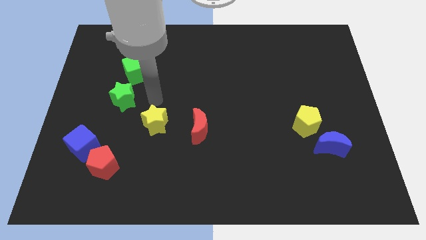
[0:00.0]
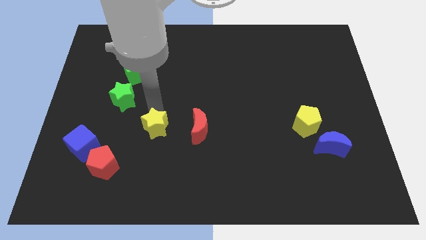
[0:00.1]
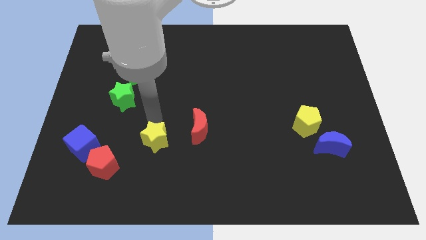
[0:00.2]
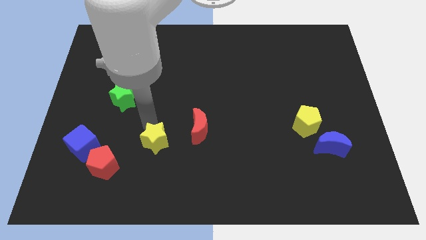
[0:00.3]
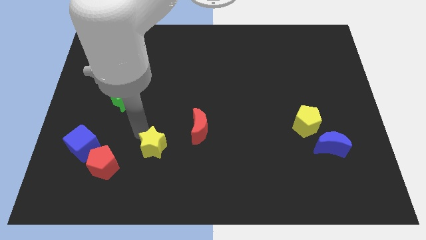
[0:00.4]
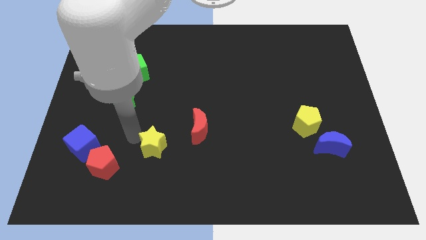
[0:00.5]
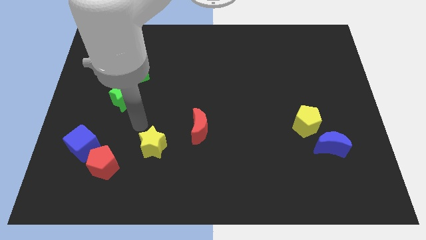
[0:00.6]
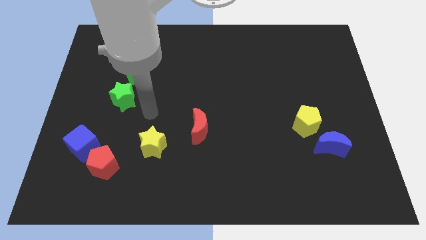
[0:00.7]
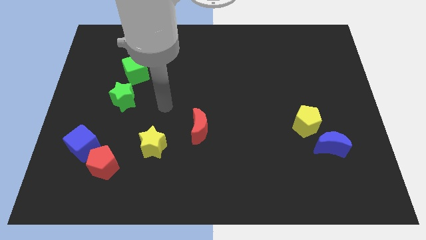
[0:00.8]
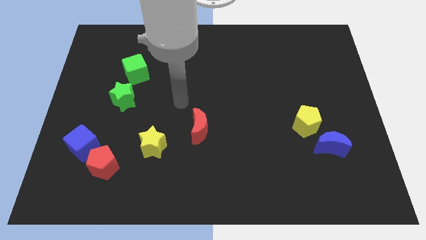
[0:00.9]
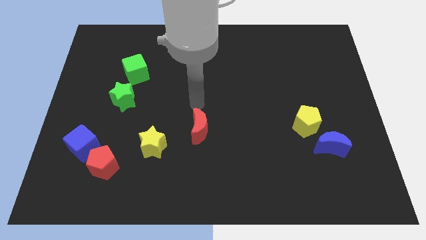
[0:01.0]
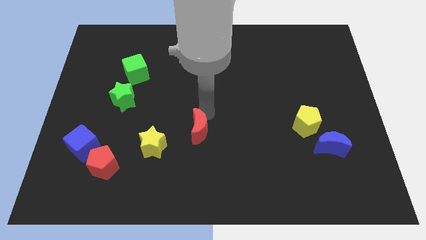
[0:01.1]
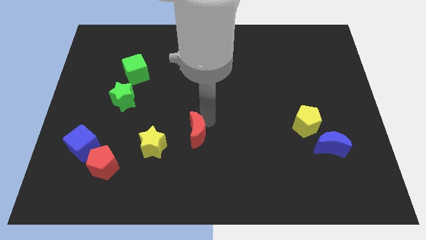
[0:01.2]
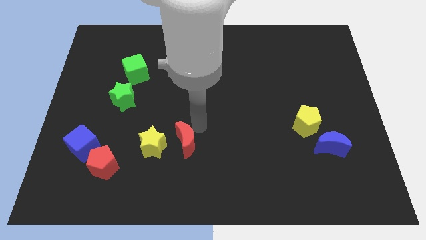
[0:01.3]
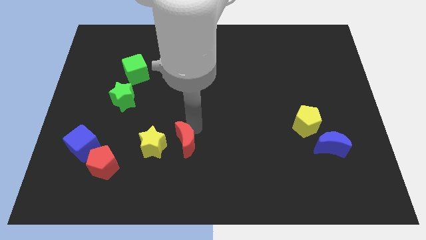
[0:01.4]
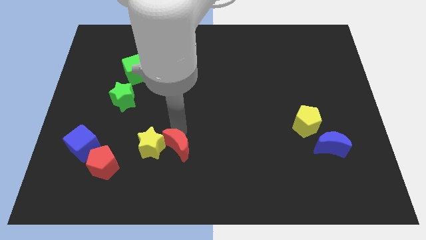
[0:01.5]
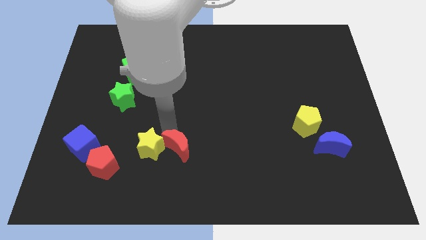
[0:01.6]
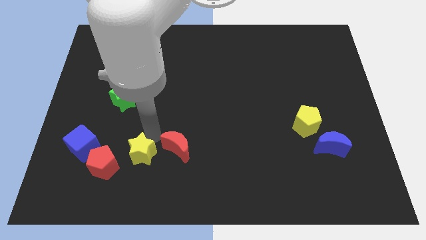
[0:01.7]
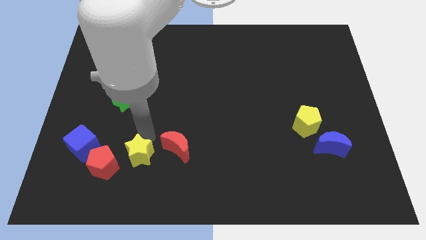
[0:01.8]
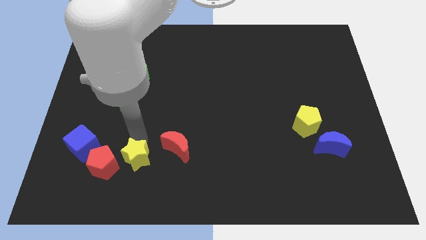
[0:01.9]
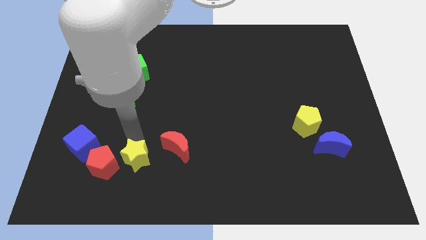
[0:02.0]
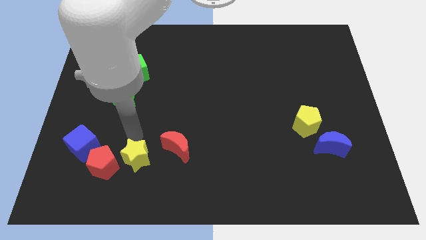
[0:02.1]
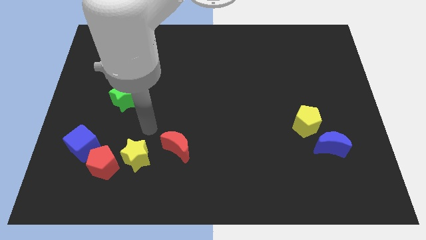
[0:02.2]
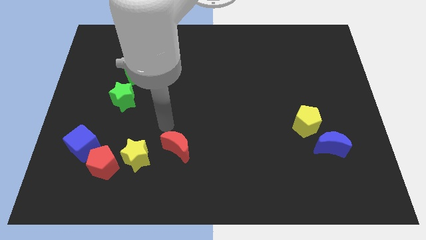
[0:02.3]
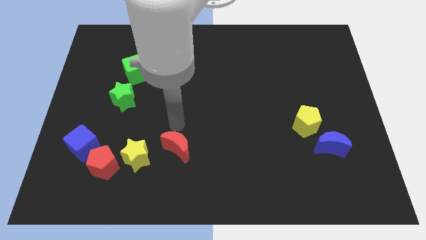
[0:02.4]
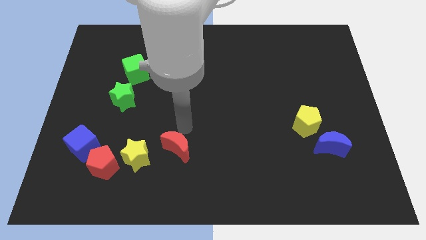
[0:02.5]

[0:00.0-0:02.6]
push the yellow star and red moon to red pentagon

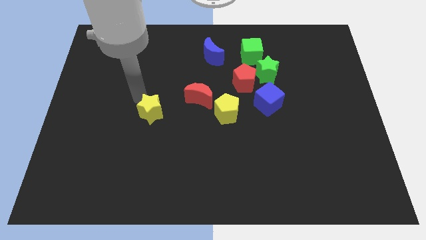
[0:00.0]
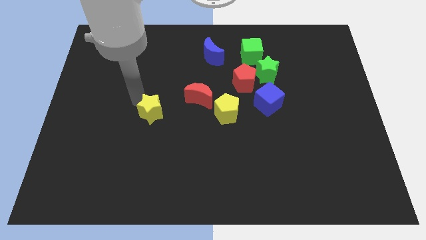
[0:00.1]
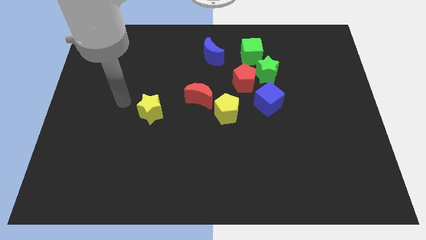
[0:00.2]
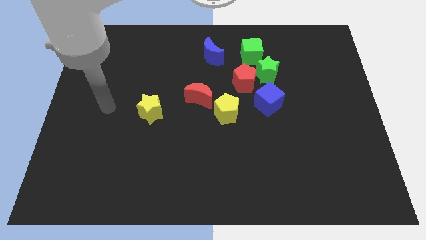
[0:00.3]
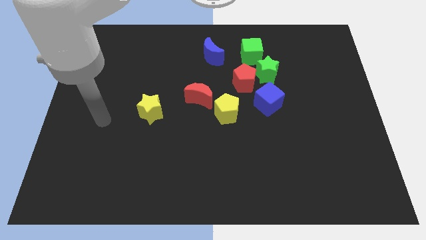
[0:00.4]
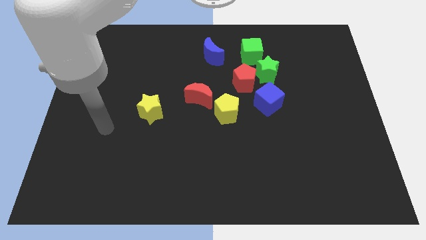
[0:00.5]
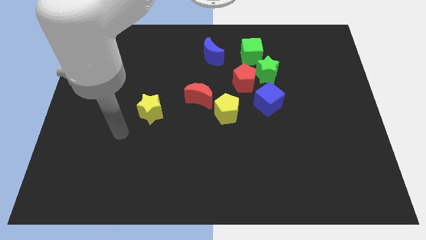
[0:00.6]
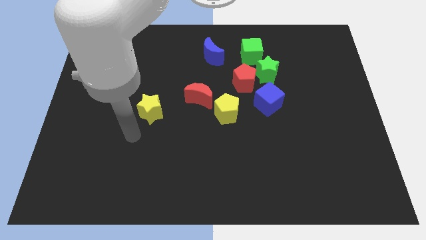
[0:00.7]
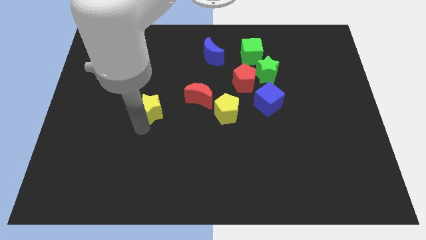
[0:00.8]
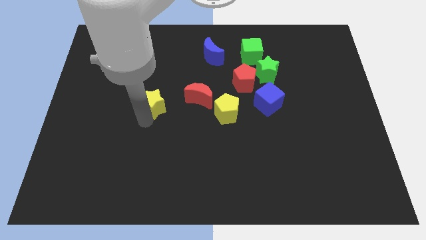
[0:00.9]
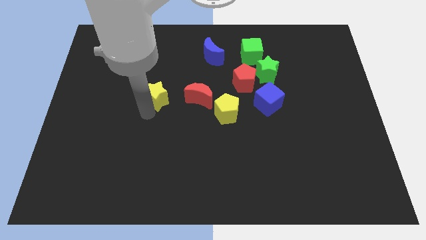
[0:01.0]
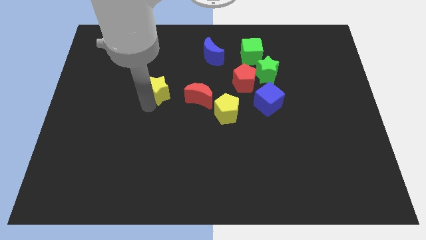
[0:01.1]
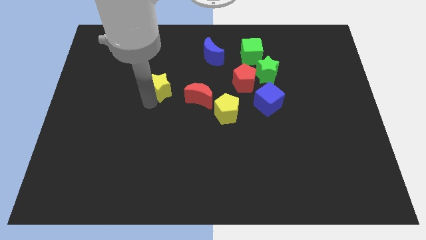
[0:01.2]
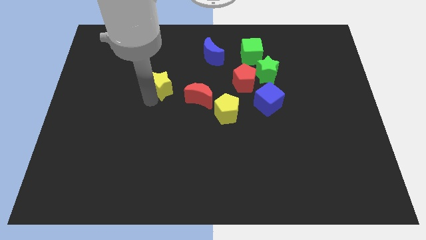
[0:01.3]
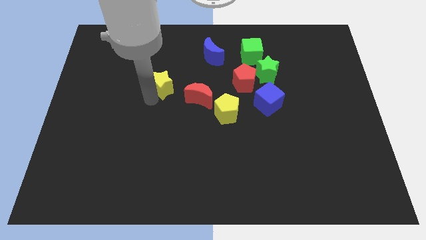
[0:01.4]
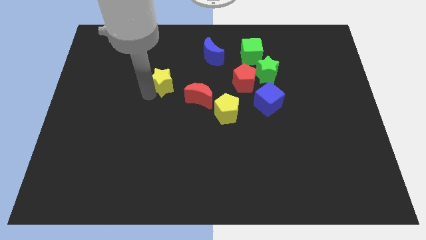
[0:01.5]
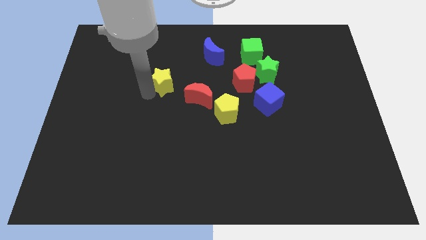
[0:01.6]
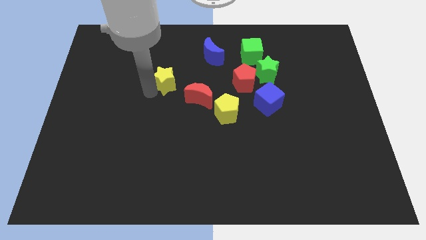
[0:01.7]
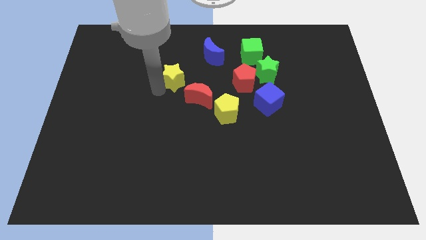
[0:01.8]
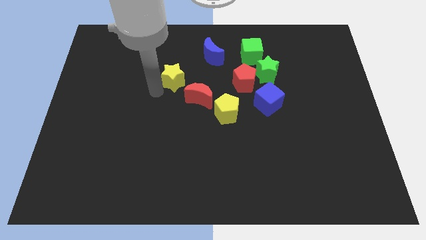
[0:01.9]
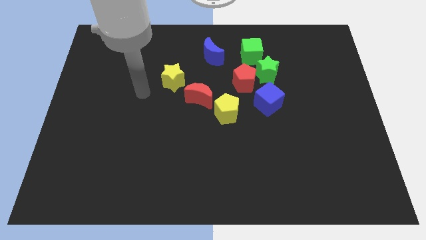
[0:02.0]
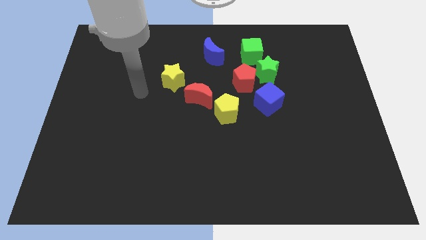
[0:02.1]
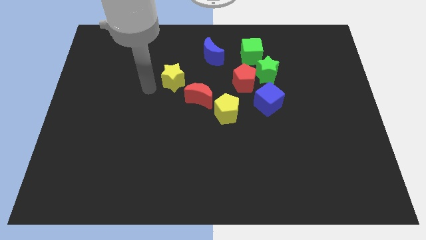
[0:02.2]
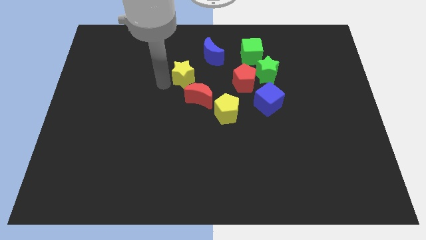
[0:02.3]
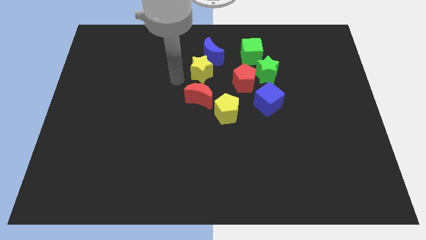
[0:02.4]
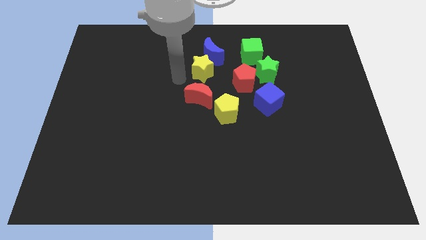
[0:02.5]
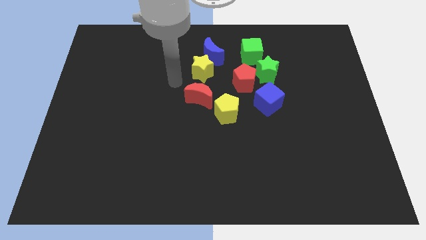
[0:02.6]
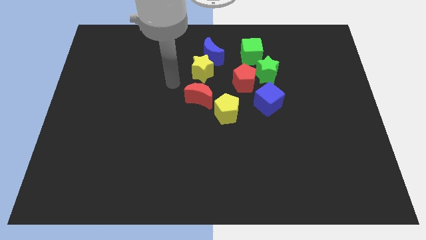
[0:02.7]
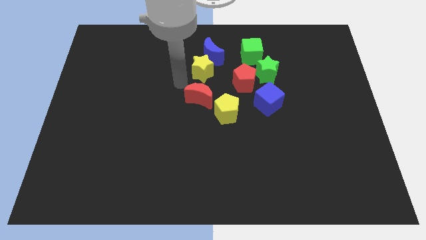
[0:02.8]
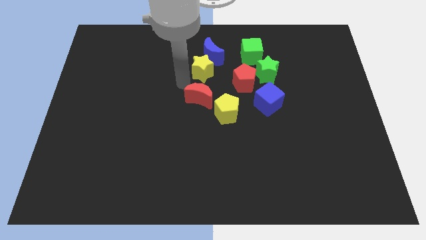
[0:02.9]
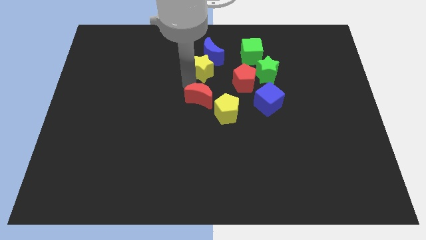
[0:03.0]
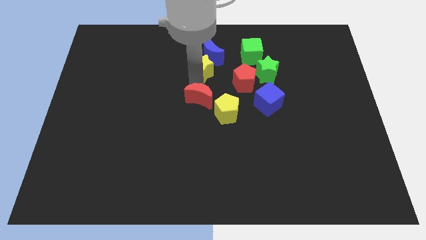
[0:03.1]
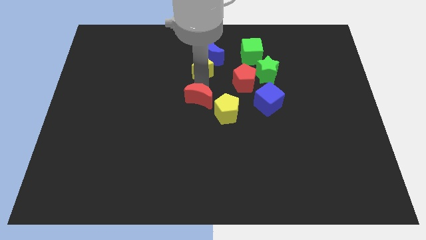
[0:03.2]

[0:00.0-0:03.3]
drag the yellow star and place it in between the blue moon and red moon

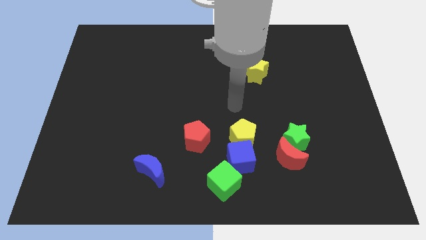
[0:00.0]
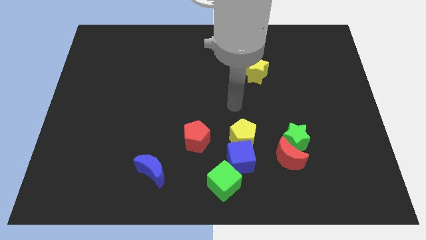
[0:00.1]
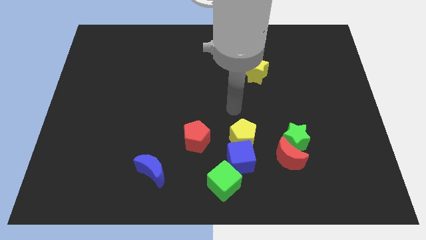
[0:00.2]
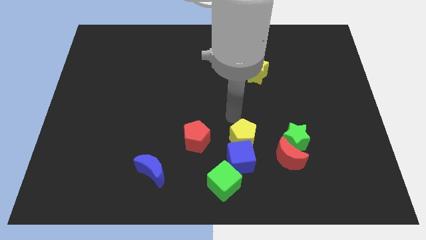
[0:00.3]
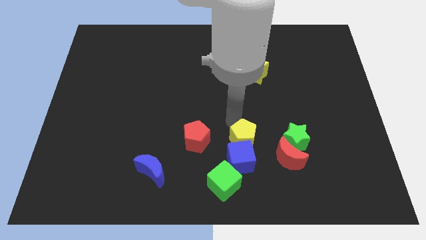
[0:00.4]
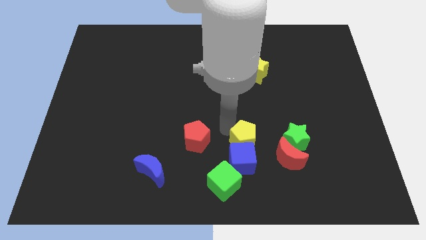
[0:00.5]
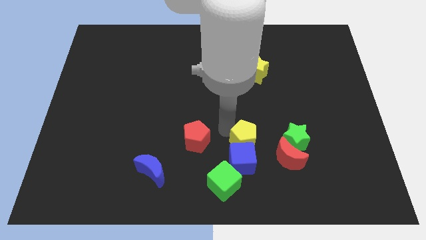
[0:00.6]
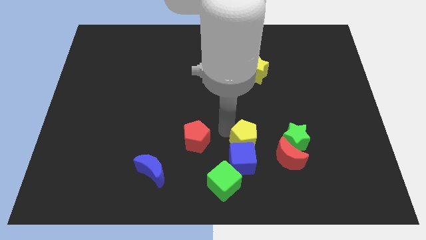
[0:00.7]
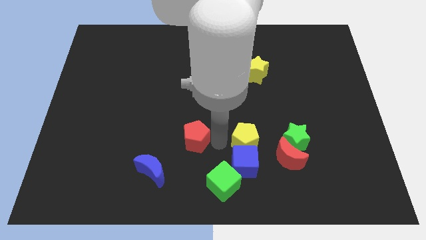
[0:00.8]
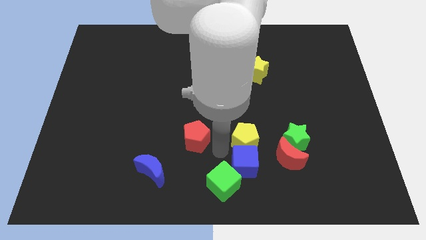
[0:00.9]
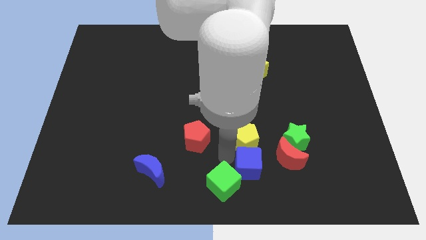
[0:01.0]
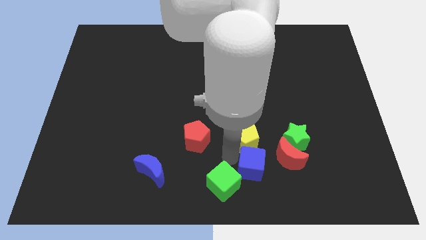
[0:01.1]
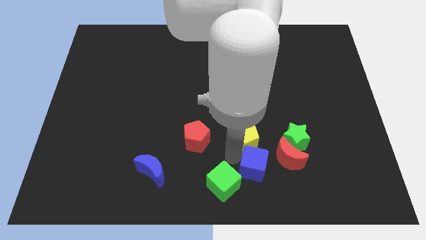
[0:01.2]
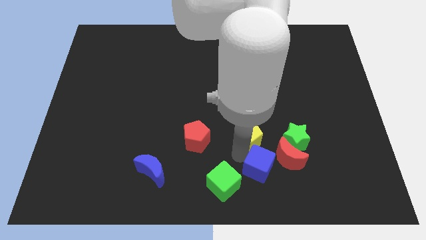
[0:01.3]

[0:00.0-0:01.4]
push the blue cube downwards slightly

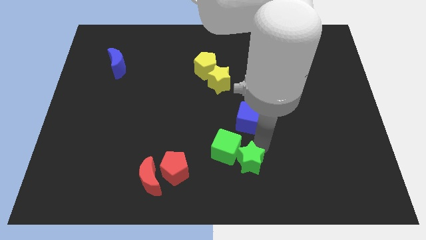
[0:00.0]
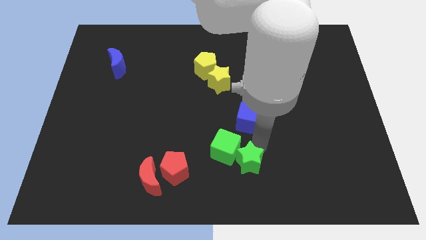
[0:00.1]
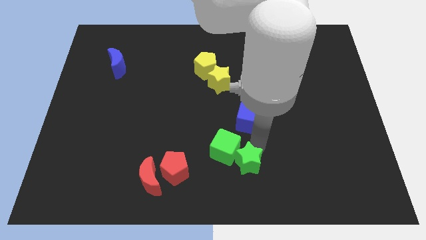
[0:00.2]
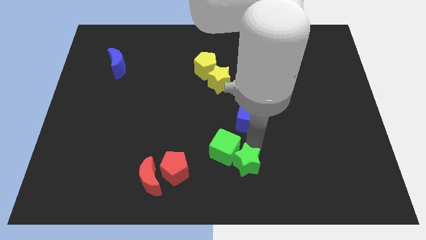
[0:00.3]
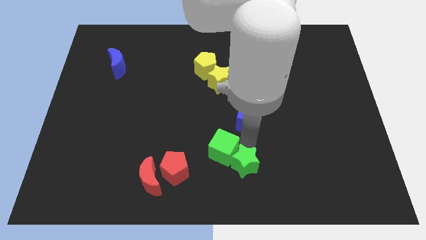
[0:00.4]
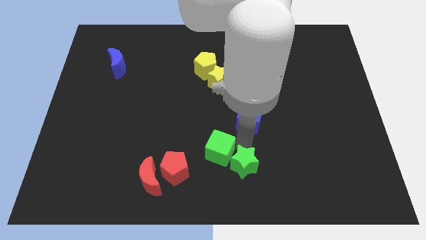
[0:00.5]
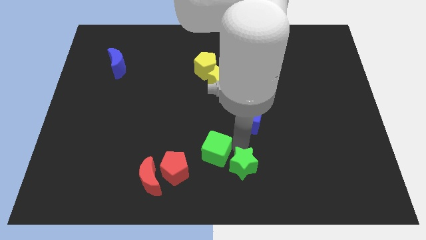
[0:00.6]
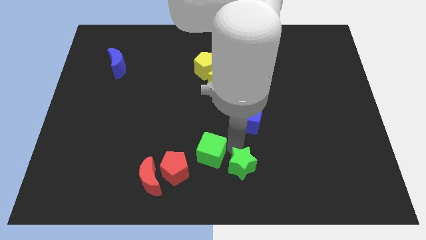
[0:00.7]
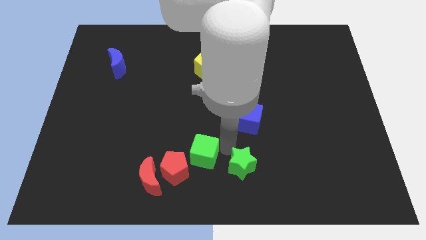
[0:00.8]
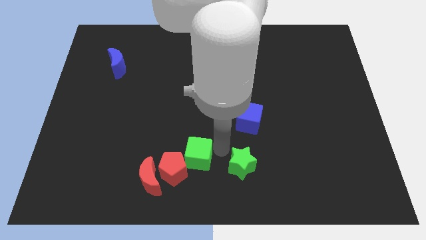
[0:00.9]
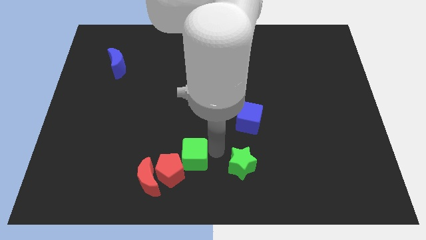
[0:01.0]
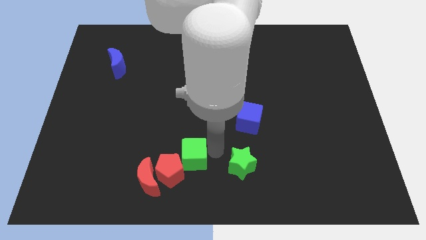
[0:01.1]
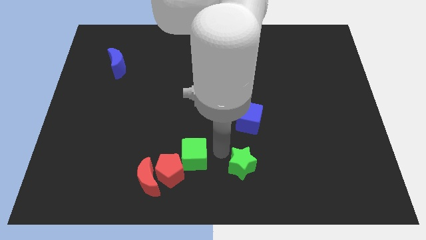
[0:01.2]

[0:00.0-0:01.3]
separate the green cube from the green star

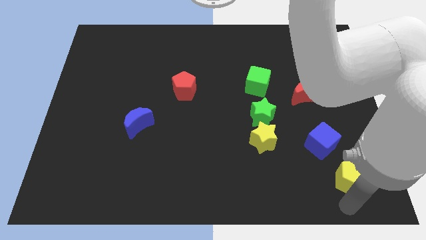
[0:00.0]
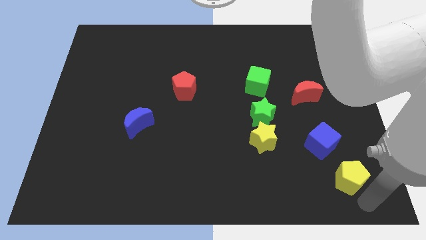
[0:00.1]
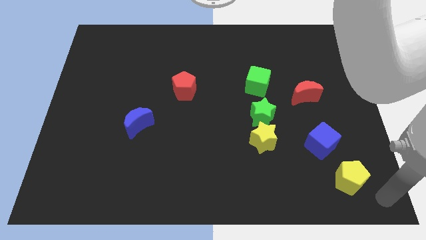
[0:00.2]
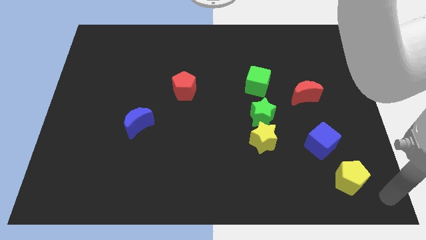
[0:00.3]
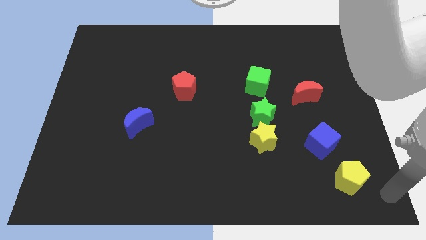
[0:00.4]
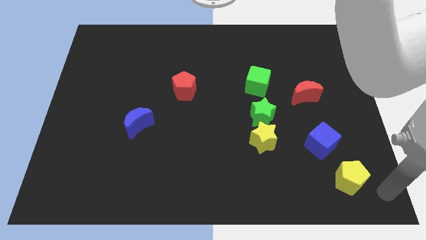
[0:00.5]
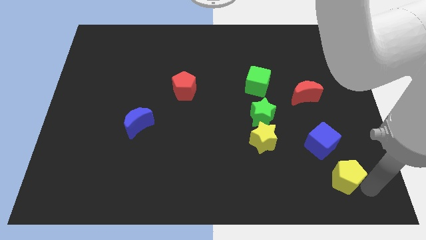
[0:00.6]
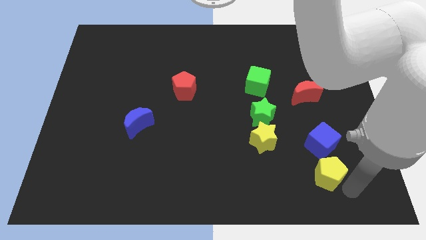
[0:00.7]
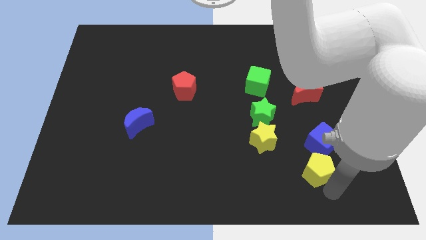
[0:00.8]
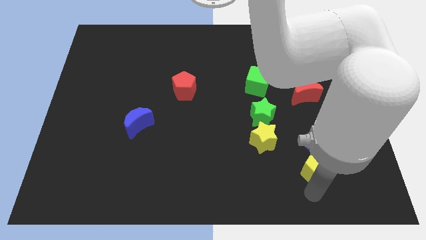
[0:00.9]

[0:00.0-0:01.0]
place the yellow pentagon below blue cube
